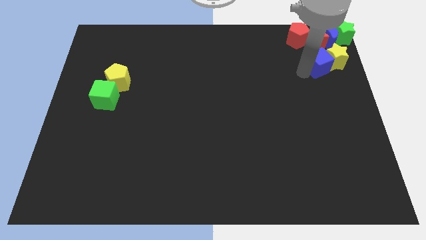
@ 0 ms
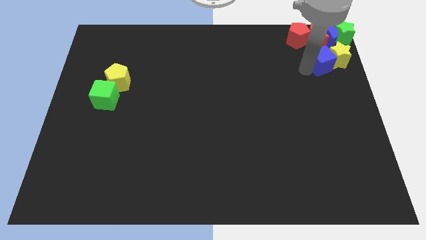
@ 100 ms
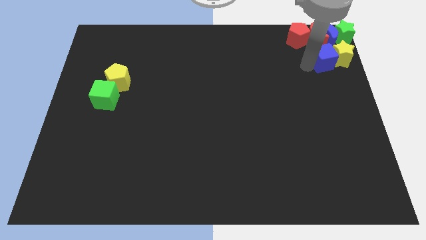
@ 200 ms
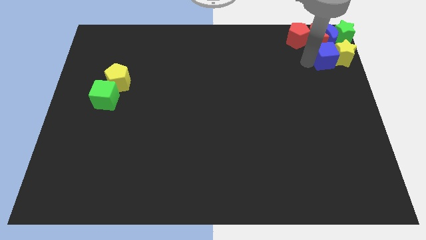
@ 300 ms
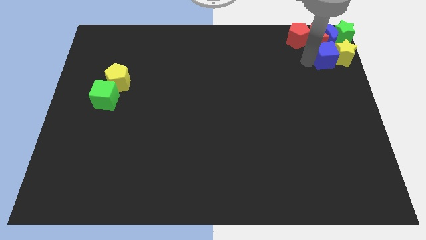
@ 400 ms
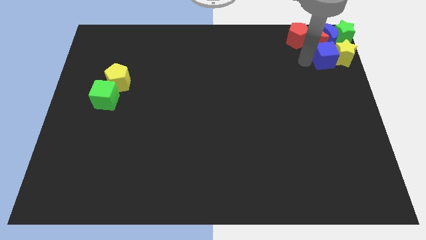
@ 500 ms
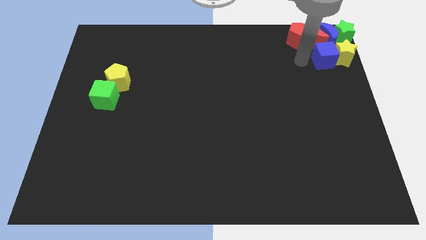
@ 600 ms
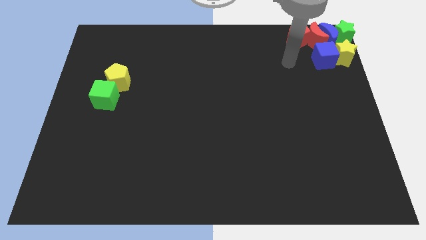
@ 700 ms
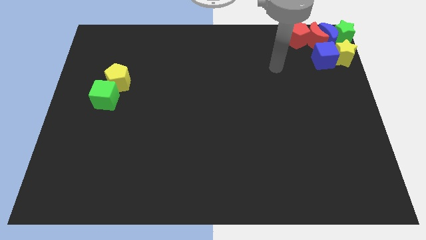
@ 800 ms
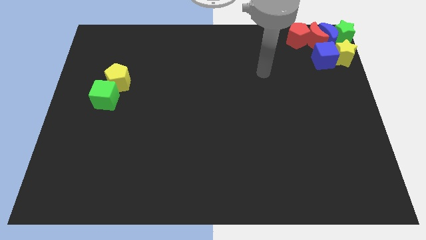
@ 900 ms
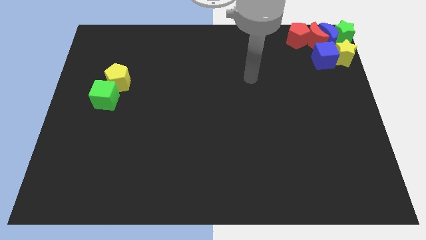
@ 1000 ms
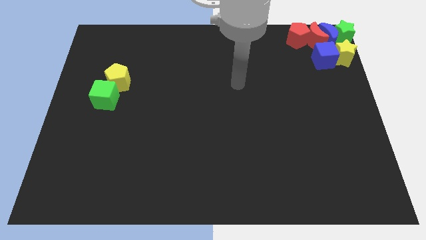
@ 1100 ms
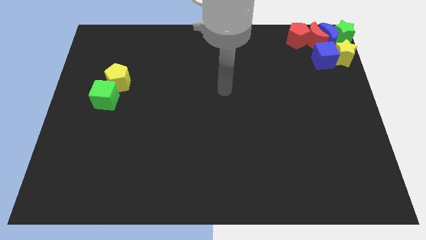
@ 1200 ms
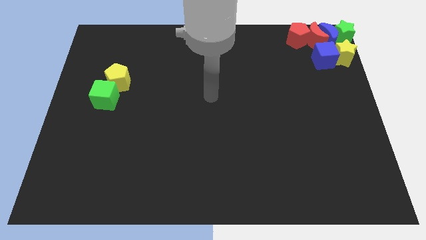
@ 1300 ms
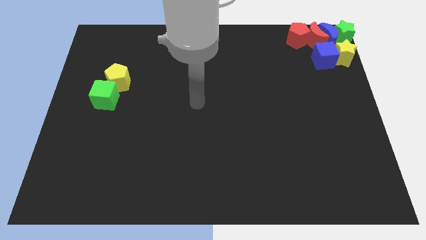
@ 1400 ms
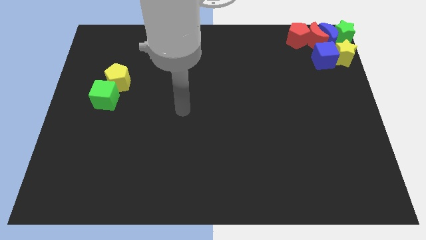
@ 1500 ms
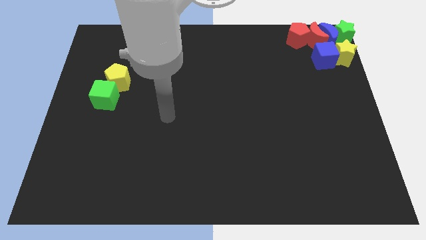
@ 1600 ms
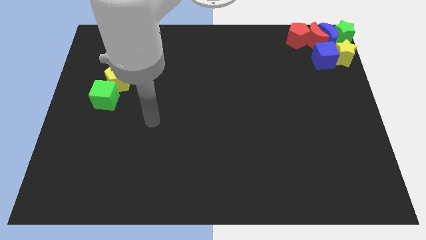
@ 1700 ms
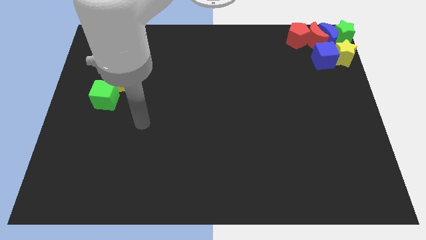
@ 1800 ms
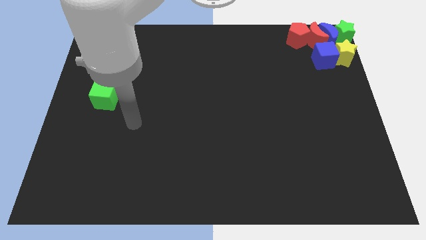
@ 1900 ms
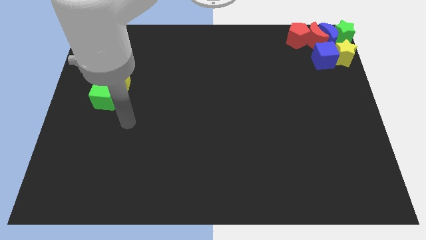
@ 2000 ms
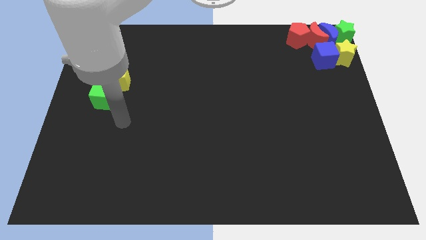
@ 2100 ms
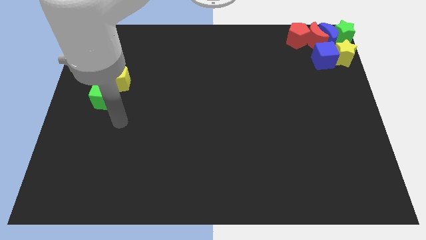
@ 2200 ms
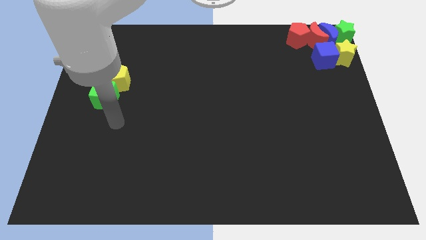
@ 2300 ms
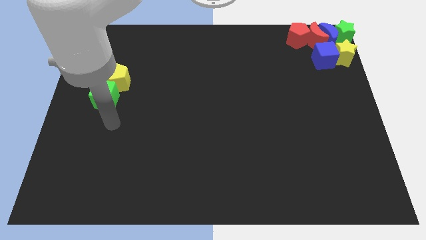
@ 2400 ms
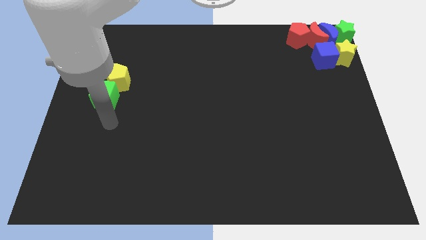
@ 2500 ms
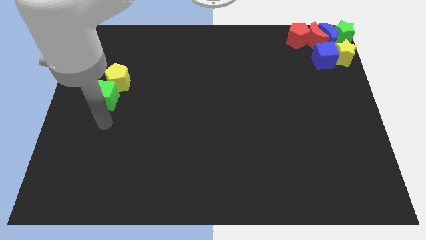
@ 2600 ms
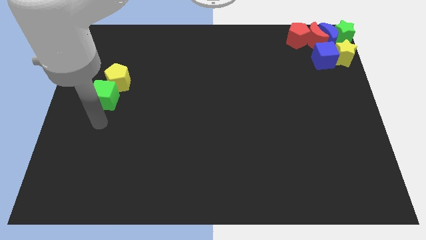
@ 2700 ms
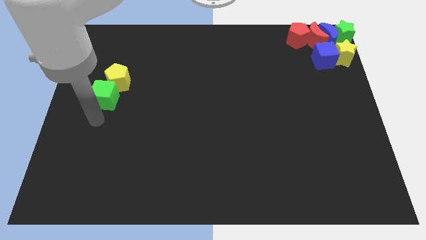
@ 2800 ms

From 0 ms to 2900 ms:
move arm to the bottom of green cube

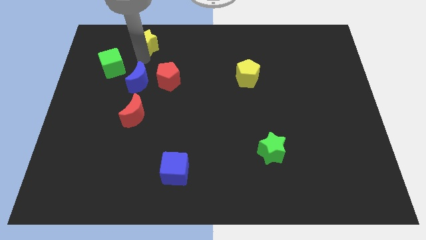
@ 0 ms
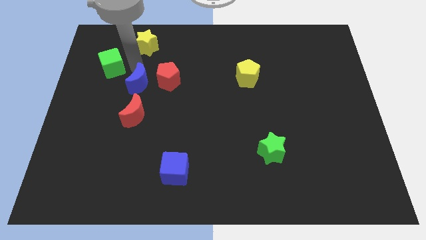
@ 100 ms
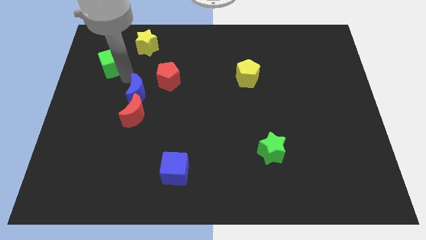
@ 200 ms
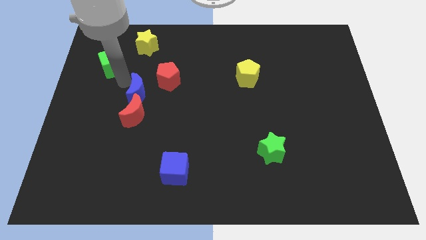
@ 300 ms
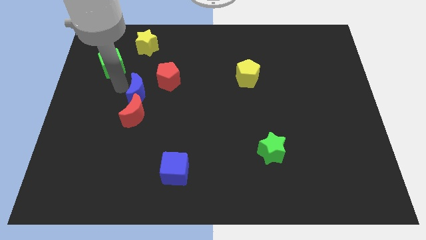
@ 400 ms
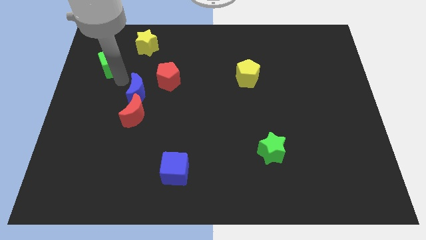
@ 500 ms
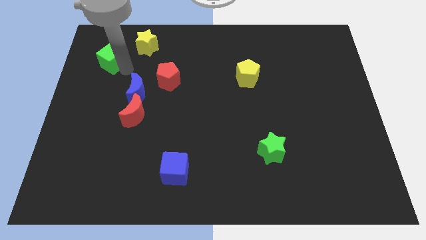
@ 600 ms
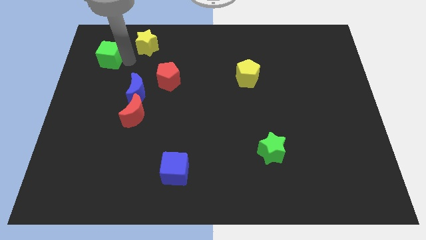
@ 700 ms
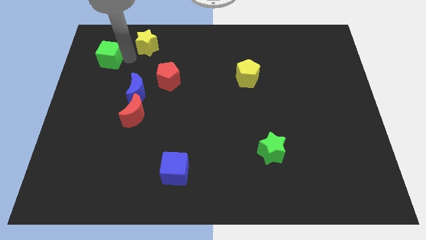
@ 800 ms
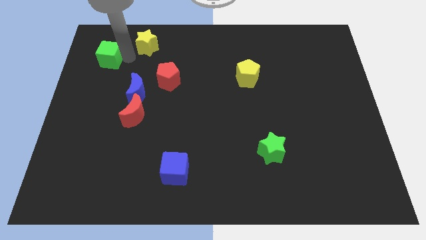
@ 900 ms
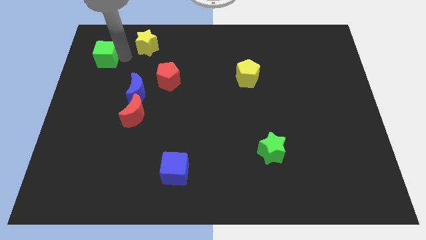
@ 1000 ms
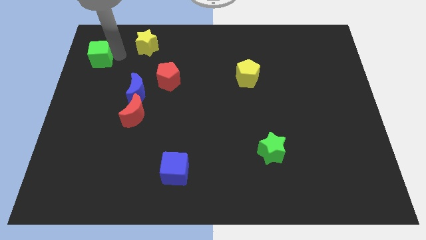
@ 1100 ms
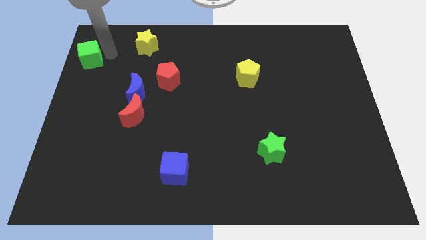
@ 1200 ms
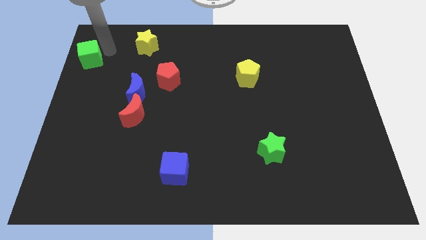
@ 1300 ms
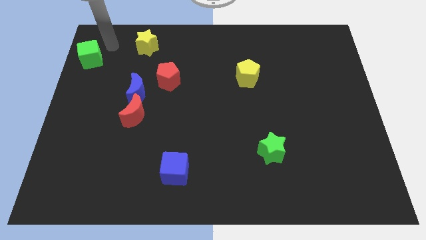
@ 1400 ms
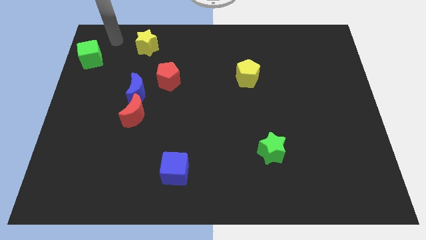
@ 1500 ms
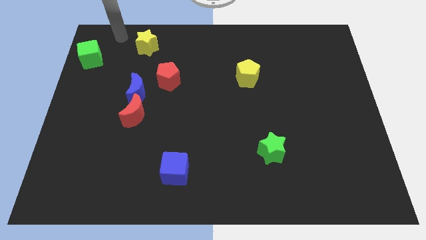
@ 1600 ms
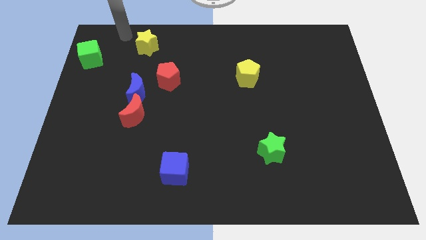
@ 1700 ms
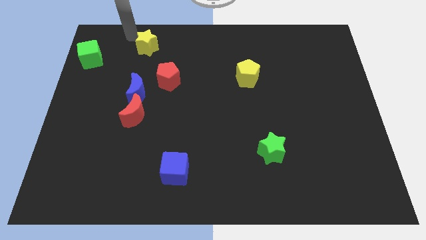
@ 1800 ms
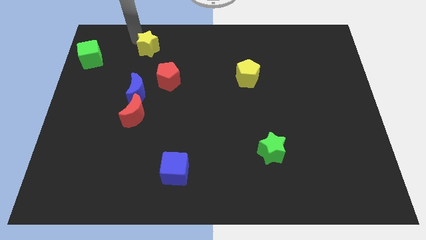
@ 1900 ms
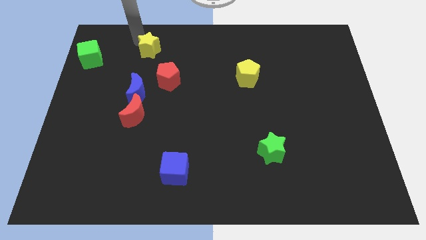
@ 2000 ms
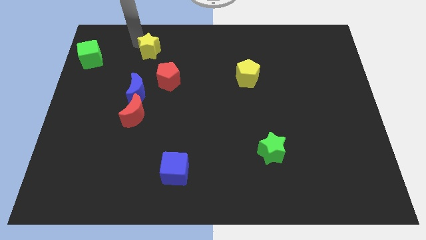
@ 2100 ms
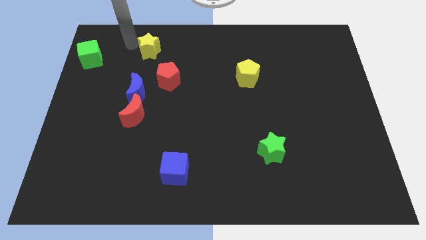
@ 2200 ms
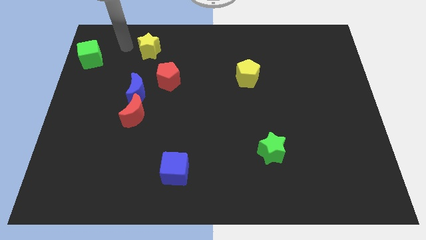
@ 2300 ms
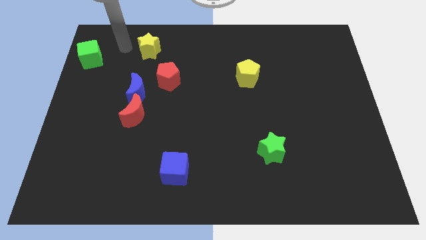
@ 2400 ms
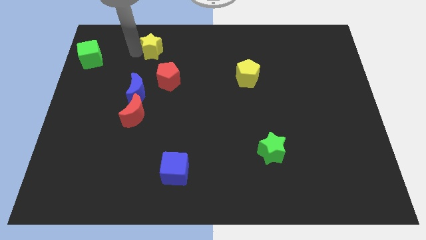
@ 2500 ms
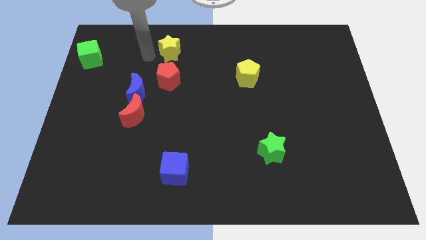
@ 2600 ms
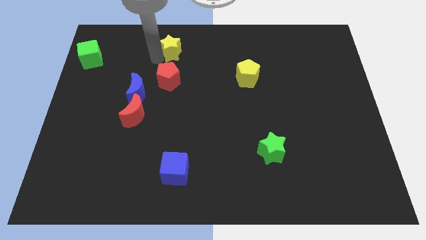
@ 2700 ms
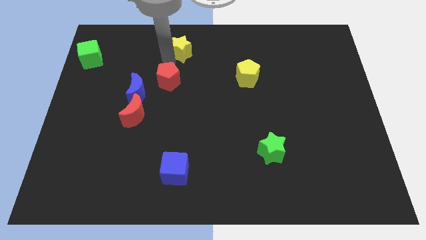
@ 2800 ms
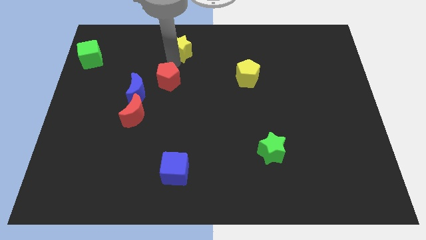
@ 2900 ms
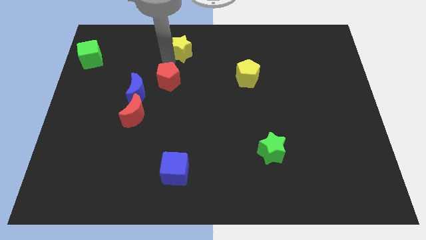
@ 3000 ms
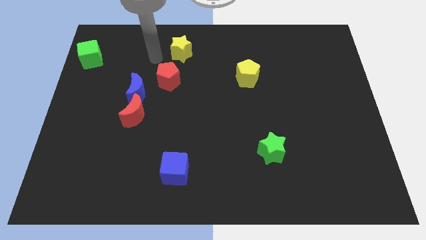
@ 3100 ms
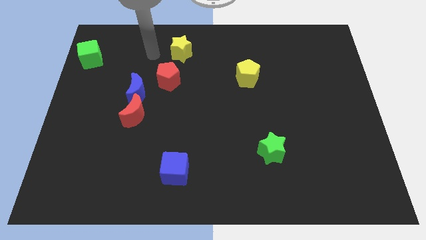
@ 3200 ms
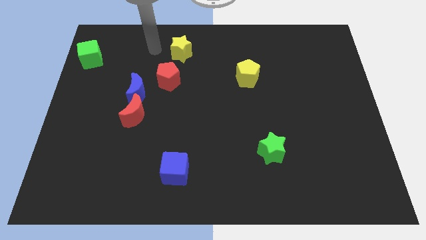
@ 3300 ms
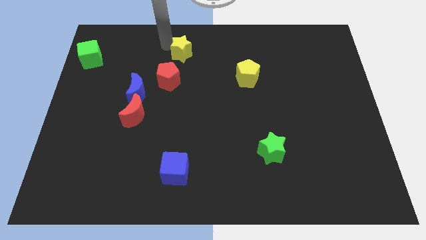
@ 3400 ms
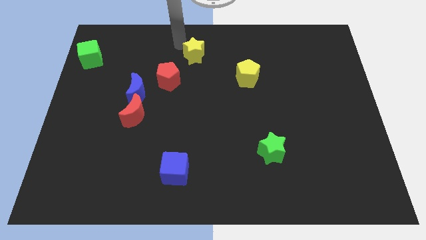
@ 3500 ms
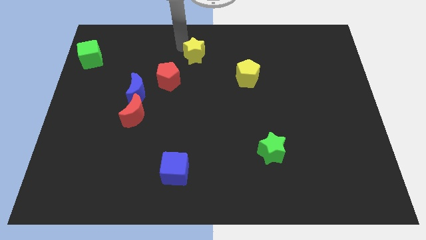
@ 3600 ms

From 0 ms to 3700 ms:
push green block and yellow star apart

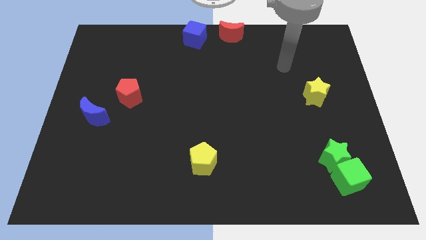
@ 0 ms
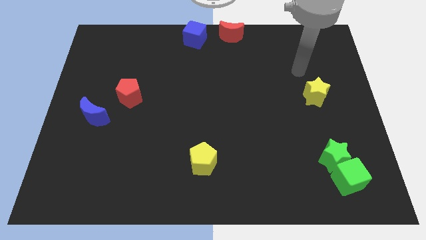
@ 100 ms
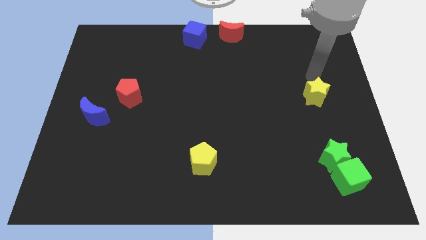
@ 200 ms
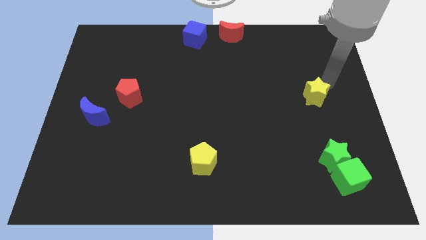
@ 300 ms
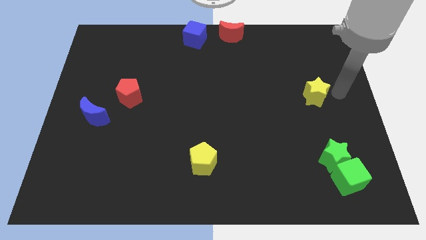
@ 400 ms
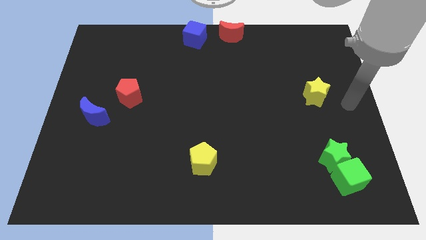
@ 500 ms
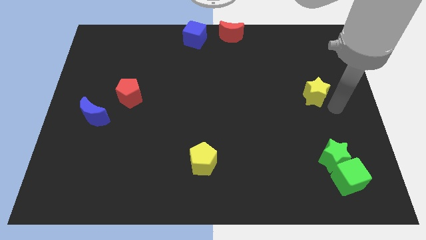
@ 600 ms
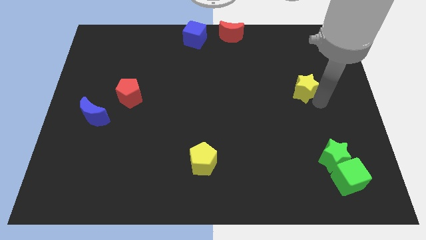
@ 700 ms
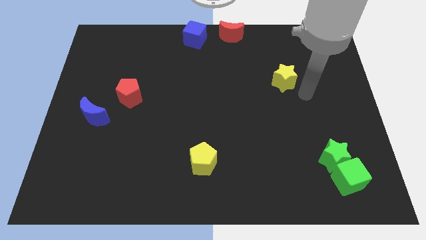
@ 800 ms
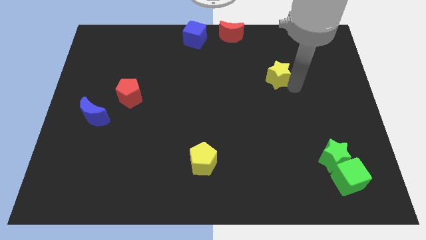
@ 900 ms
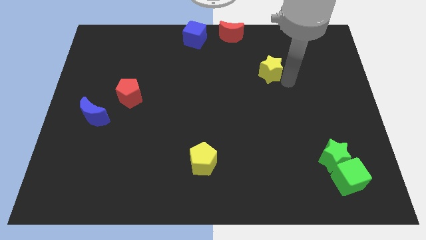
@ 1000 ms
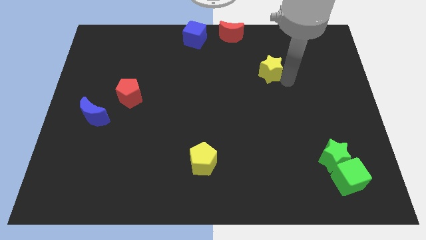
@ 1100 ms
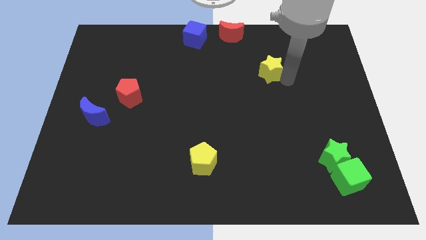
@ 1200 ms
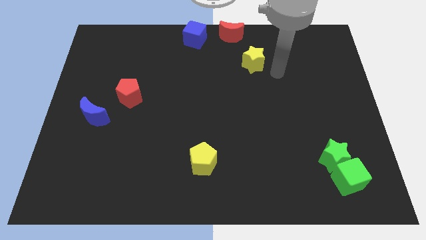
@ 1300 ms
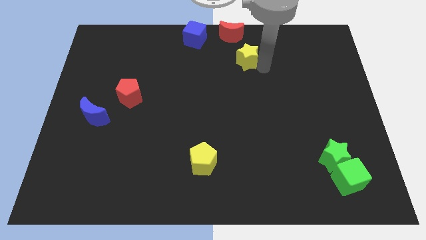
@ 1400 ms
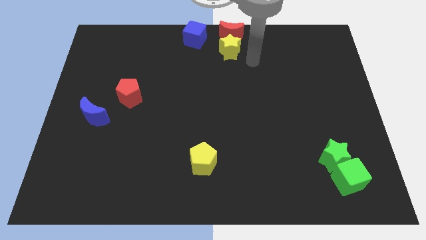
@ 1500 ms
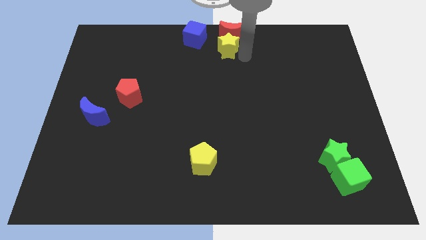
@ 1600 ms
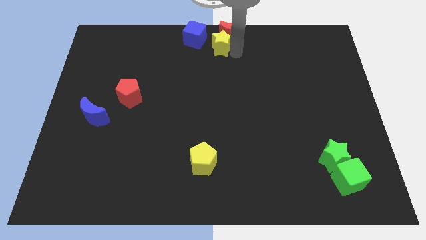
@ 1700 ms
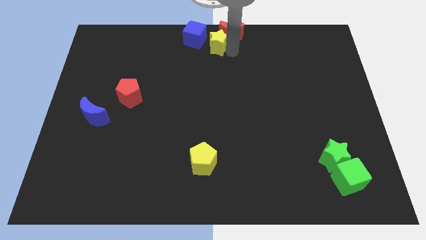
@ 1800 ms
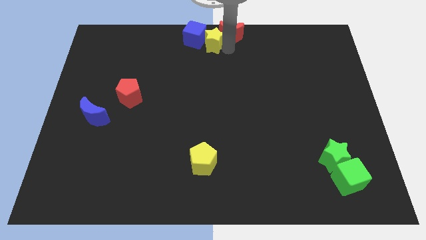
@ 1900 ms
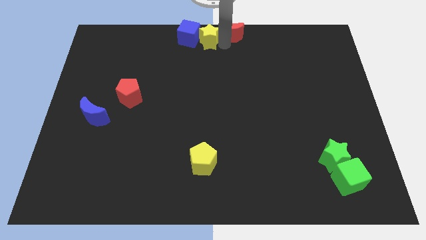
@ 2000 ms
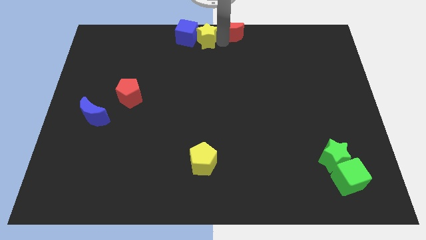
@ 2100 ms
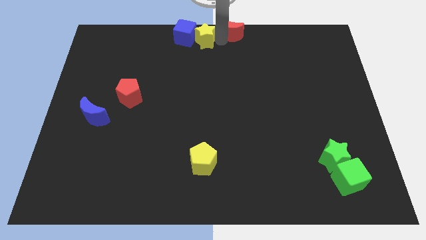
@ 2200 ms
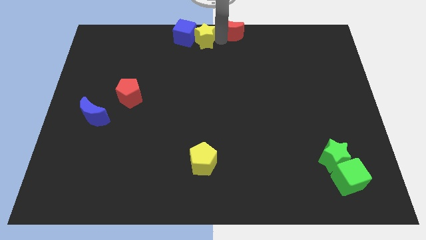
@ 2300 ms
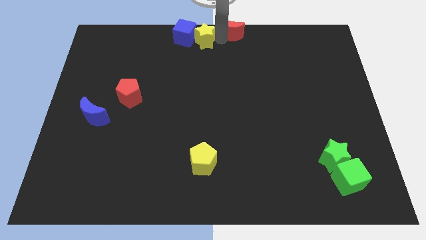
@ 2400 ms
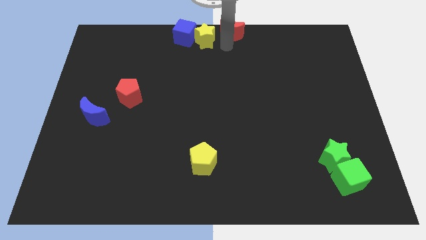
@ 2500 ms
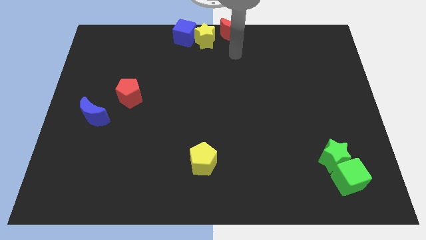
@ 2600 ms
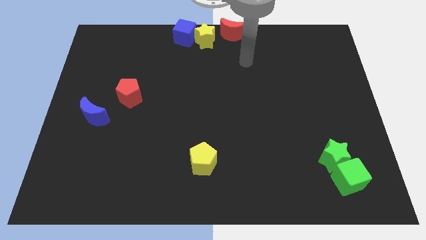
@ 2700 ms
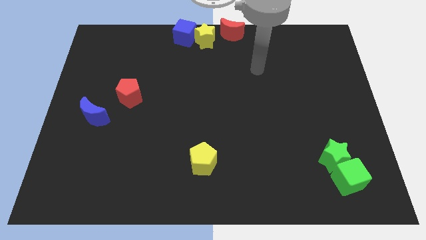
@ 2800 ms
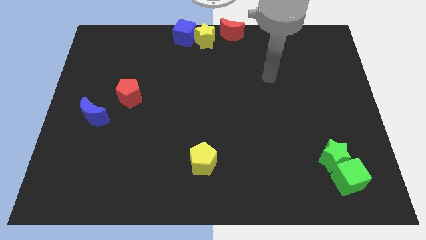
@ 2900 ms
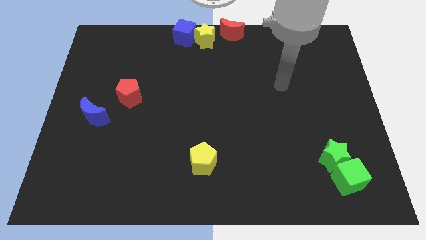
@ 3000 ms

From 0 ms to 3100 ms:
push the green star into the blue cube
